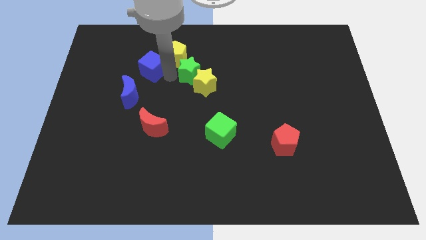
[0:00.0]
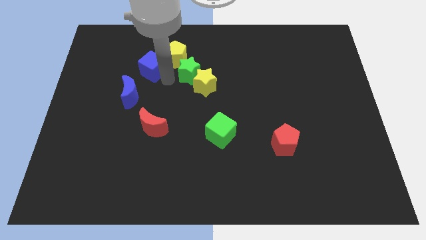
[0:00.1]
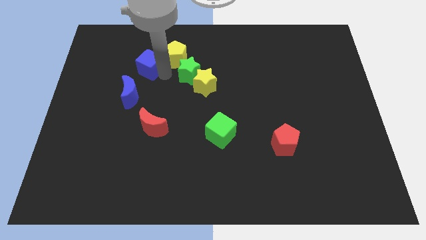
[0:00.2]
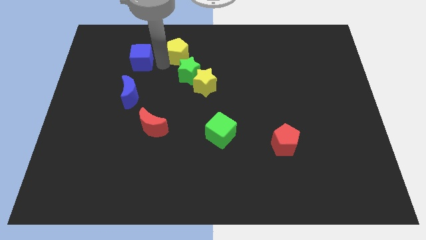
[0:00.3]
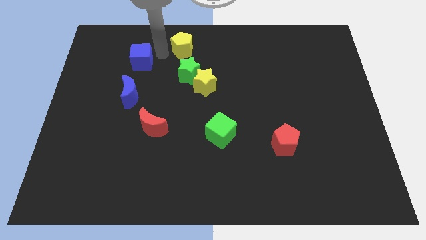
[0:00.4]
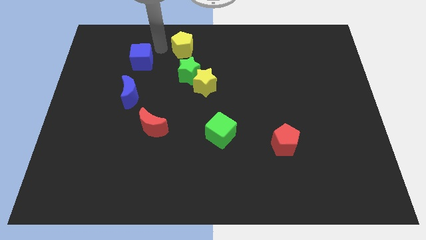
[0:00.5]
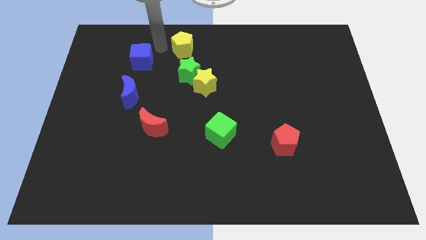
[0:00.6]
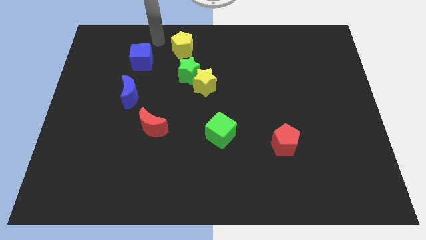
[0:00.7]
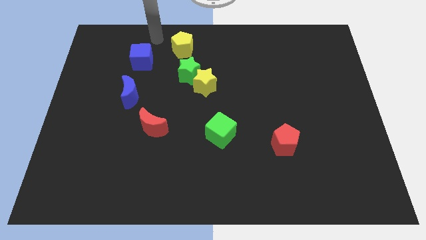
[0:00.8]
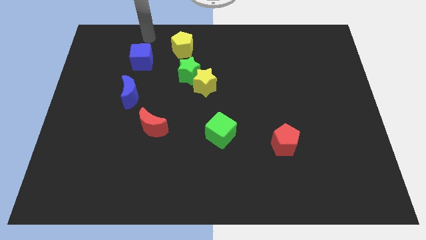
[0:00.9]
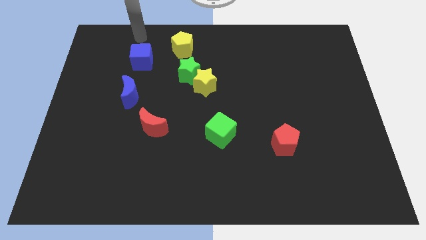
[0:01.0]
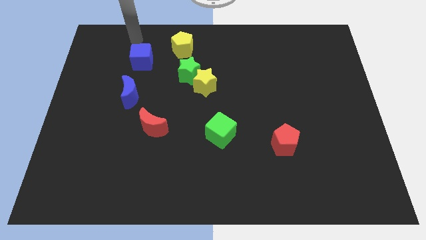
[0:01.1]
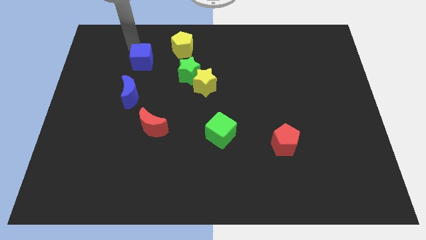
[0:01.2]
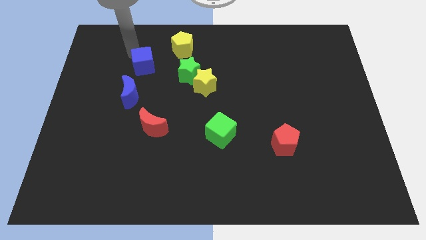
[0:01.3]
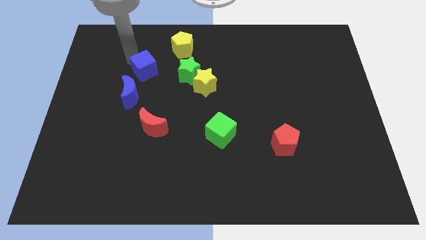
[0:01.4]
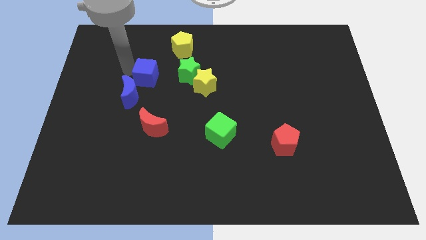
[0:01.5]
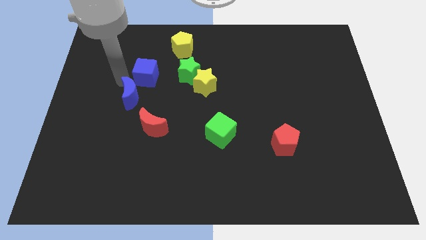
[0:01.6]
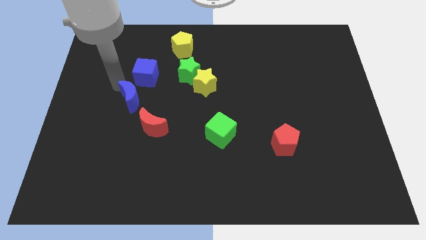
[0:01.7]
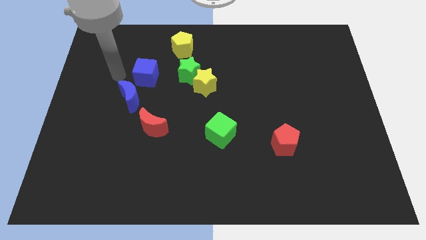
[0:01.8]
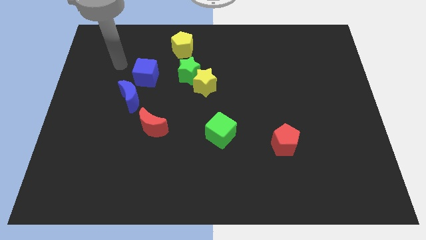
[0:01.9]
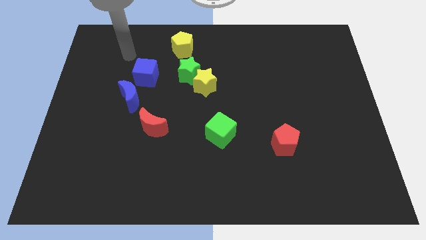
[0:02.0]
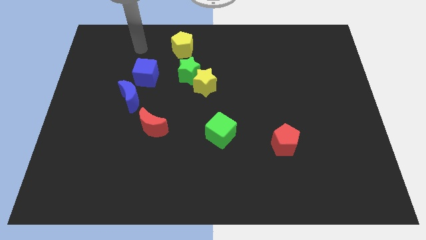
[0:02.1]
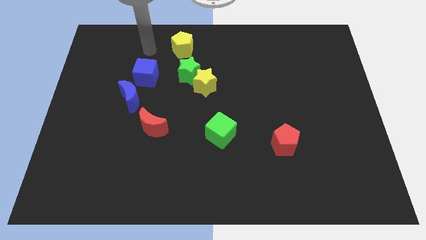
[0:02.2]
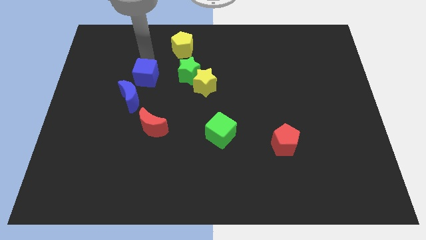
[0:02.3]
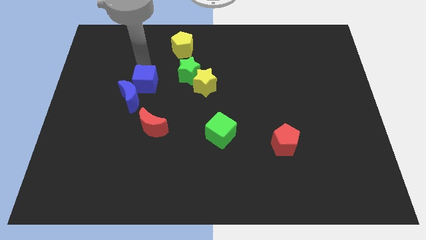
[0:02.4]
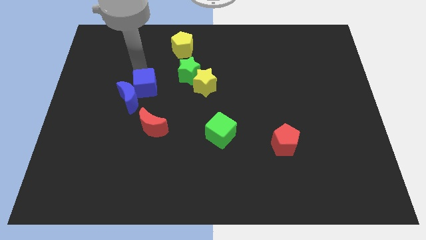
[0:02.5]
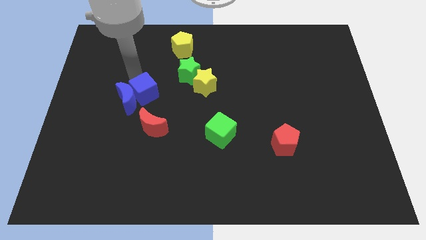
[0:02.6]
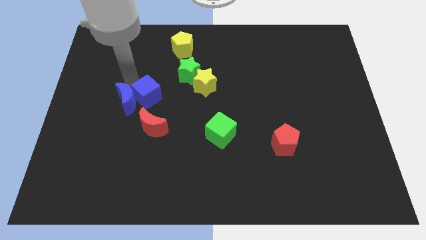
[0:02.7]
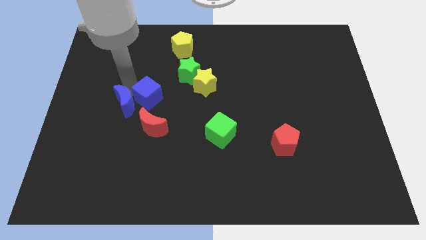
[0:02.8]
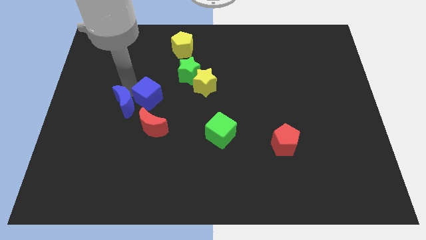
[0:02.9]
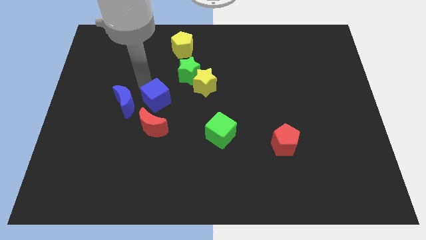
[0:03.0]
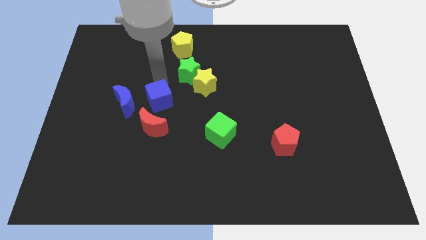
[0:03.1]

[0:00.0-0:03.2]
move the blue cube aon top of the red crescent

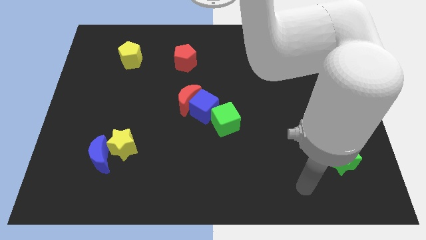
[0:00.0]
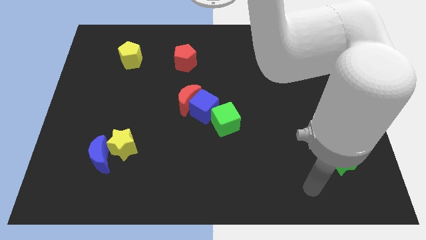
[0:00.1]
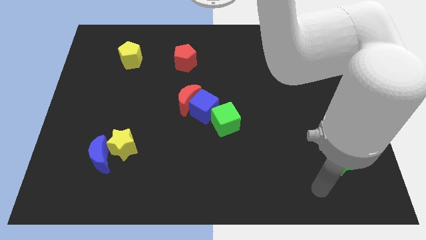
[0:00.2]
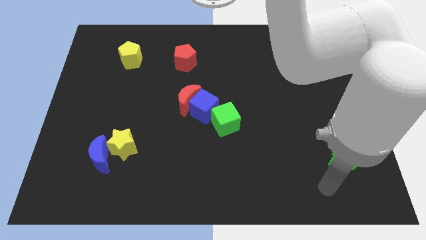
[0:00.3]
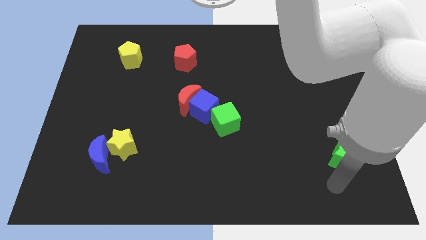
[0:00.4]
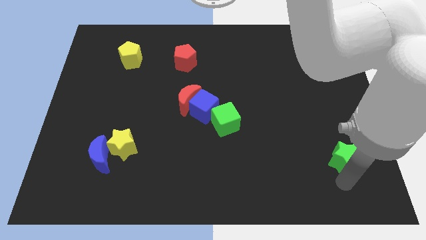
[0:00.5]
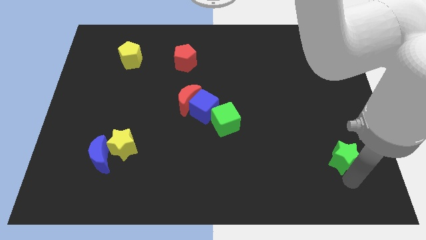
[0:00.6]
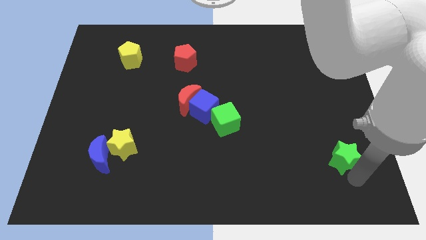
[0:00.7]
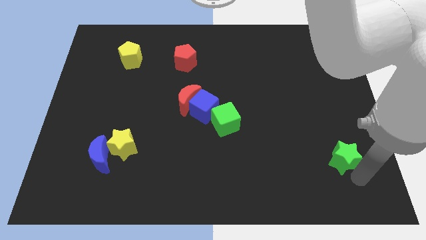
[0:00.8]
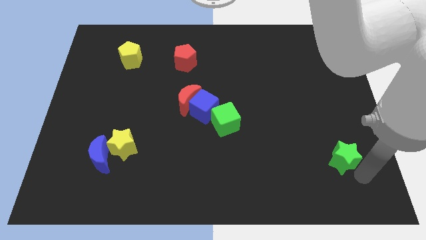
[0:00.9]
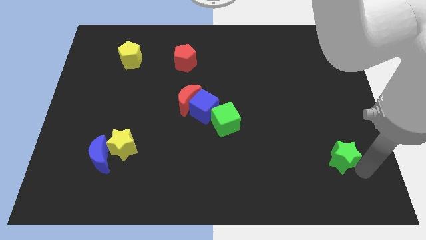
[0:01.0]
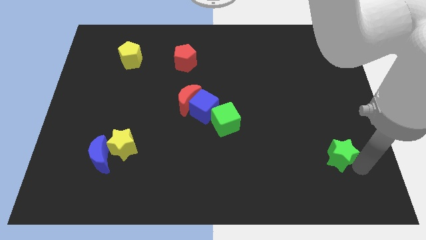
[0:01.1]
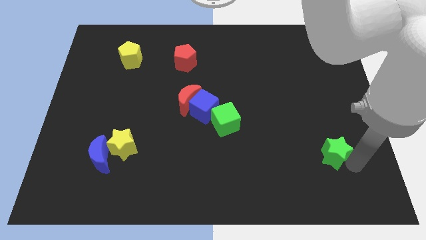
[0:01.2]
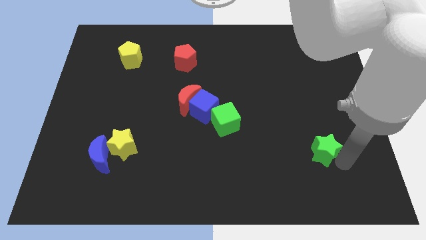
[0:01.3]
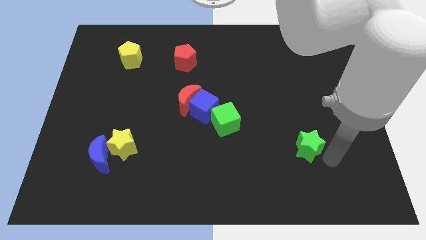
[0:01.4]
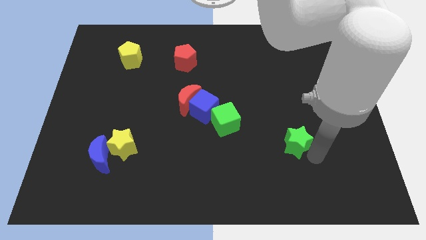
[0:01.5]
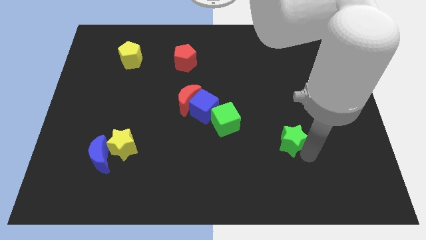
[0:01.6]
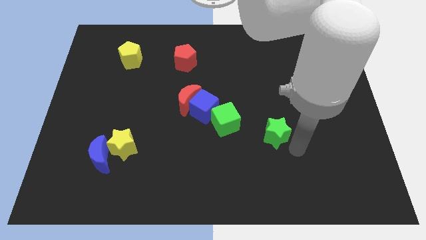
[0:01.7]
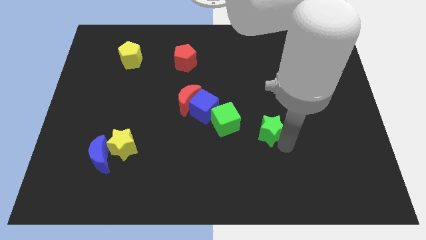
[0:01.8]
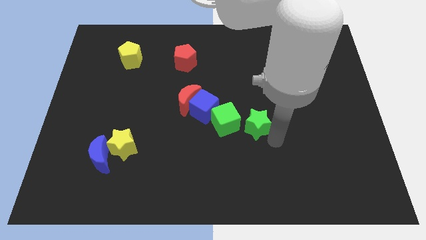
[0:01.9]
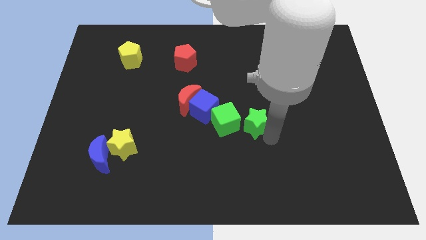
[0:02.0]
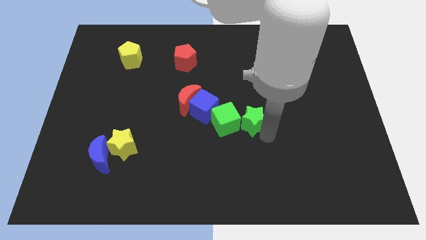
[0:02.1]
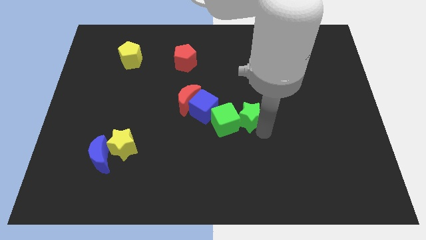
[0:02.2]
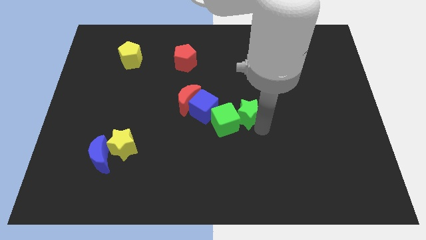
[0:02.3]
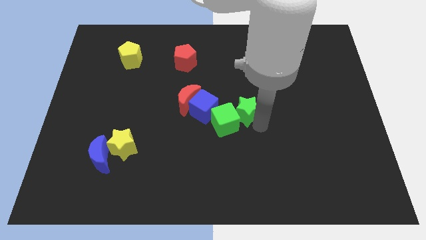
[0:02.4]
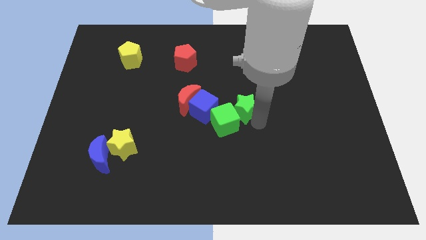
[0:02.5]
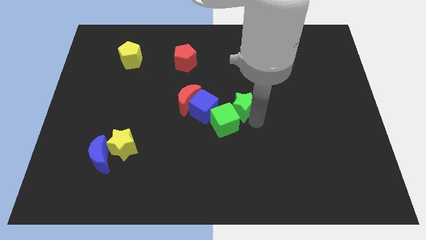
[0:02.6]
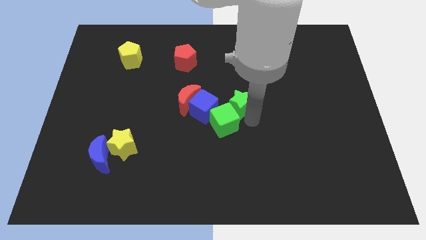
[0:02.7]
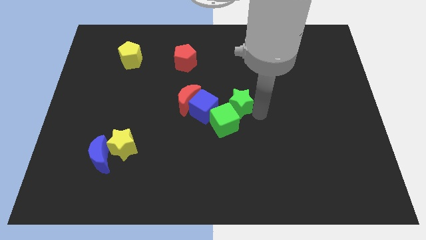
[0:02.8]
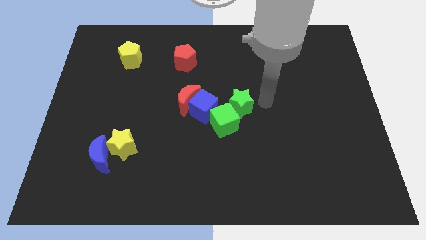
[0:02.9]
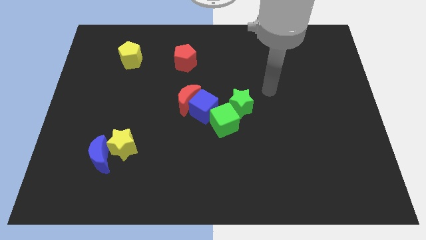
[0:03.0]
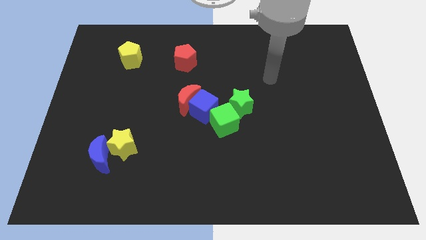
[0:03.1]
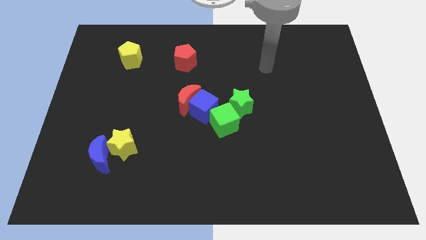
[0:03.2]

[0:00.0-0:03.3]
push the green star to the top right of the green cube

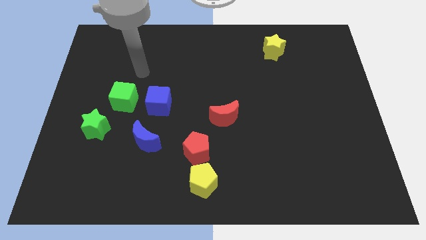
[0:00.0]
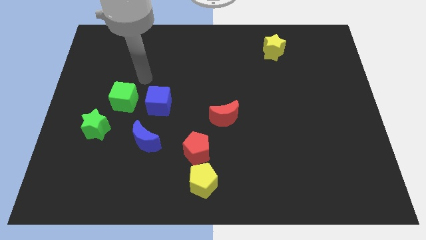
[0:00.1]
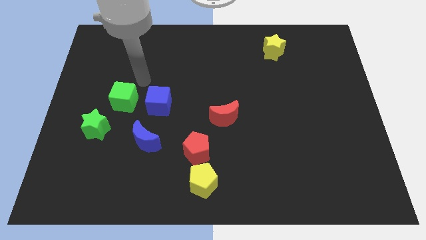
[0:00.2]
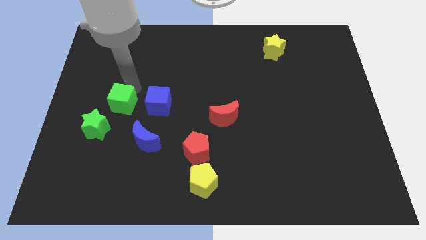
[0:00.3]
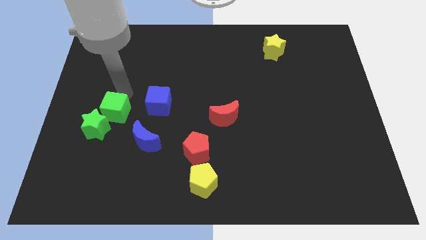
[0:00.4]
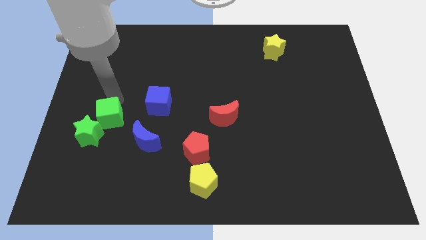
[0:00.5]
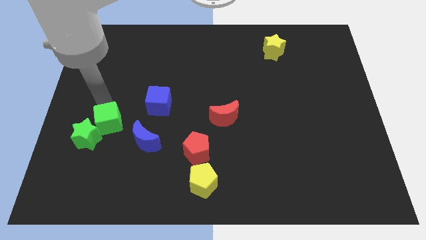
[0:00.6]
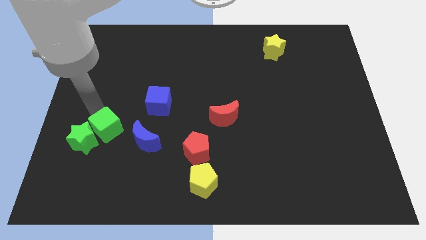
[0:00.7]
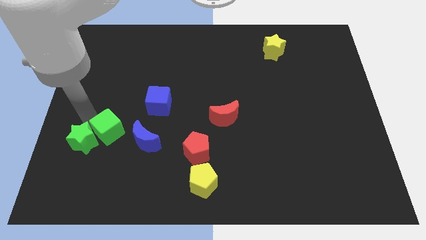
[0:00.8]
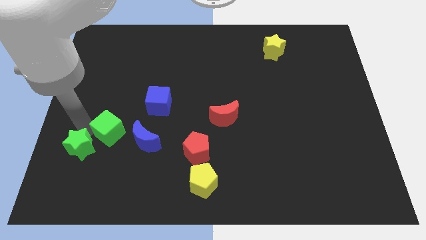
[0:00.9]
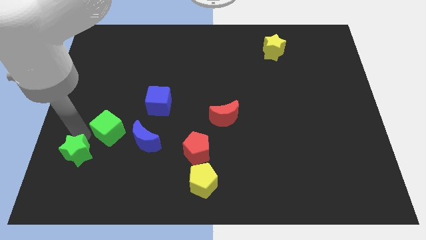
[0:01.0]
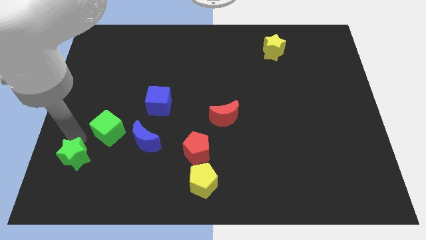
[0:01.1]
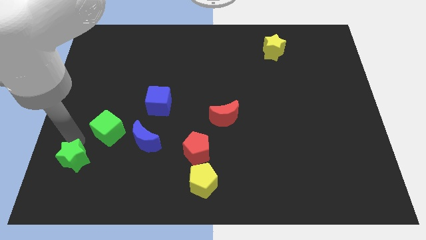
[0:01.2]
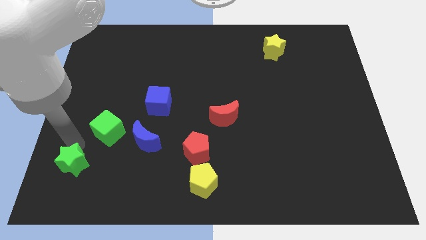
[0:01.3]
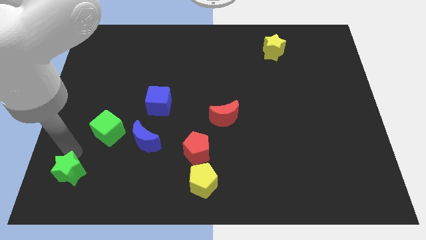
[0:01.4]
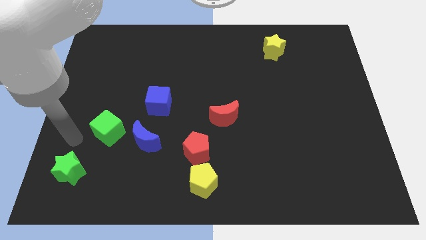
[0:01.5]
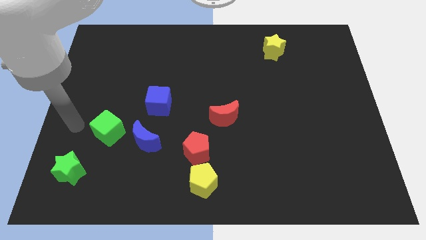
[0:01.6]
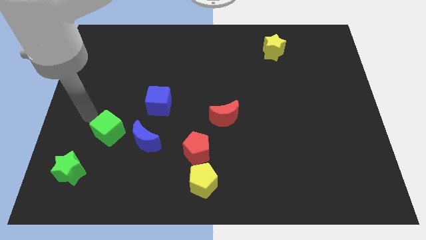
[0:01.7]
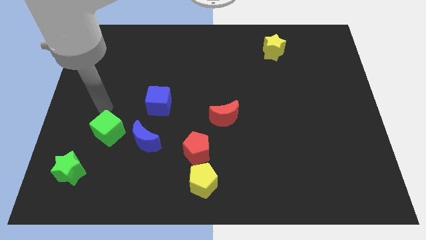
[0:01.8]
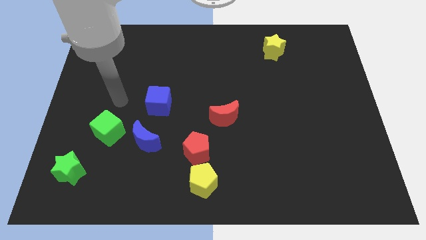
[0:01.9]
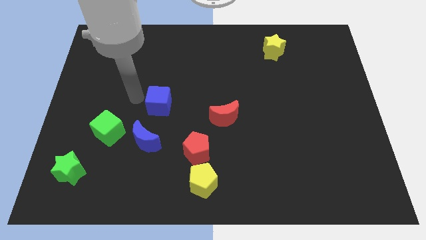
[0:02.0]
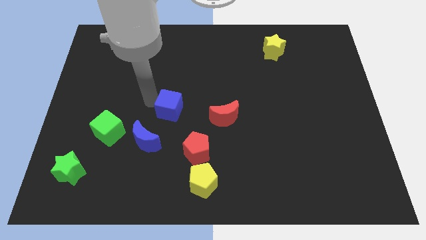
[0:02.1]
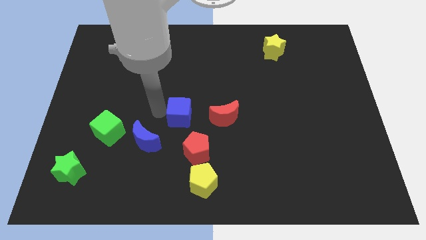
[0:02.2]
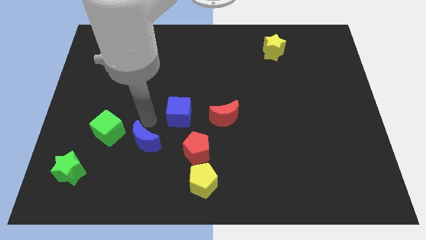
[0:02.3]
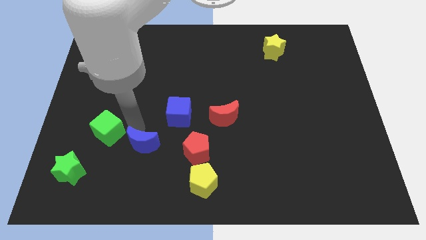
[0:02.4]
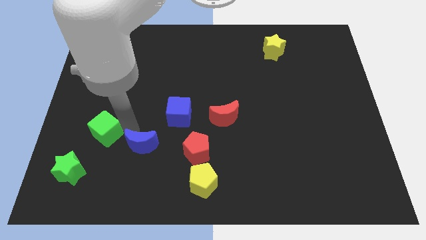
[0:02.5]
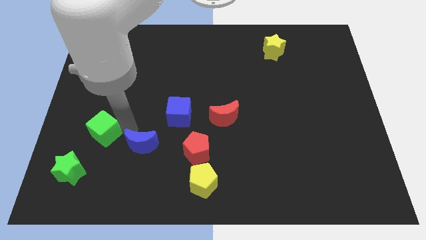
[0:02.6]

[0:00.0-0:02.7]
place your arm between blue moon and green cube
